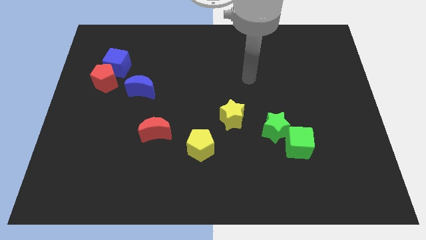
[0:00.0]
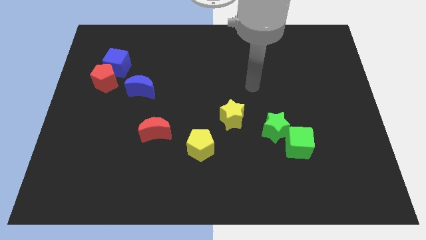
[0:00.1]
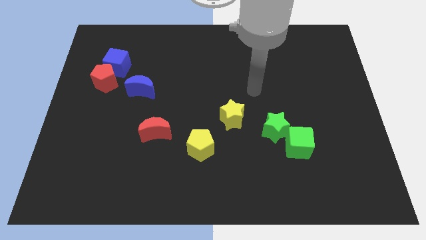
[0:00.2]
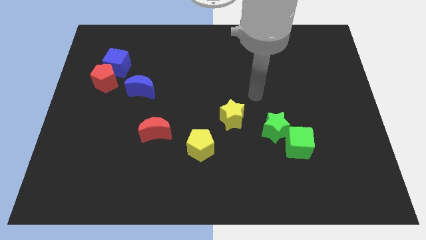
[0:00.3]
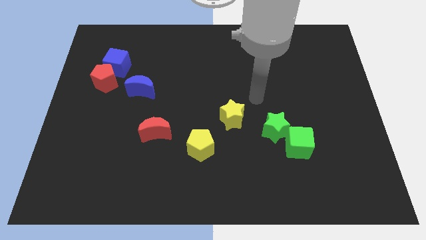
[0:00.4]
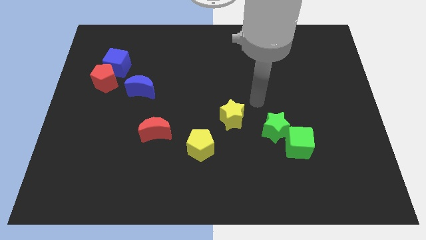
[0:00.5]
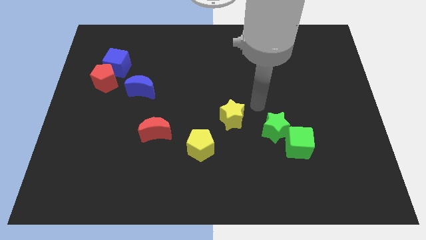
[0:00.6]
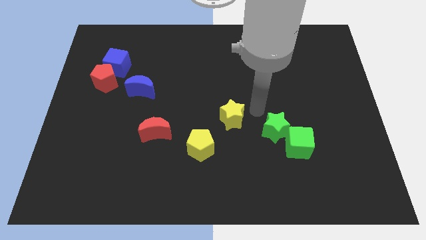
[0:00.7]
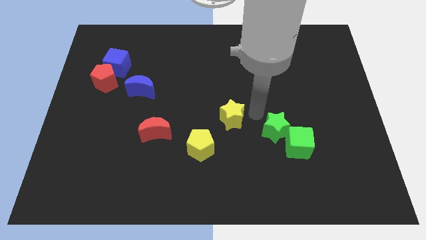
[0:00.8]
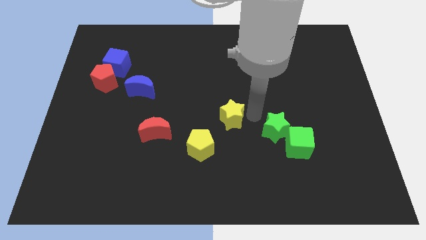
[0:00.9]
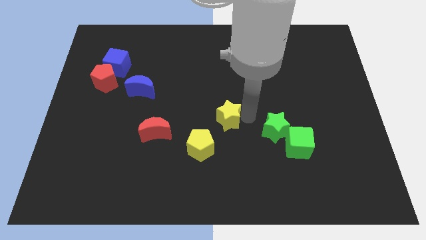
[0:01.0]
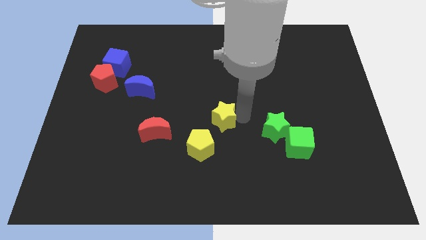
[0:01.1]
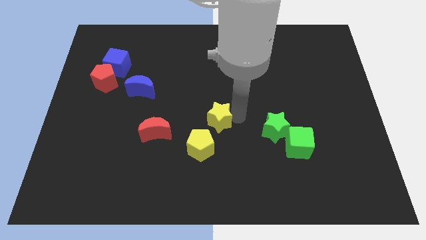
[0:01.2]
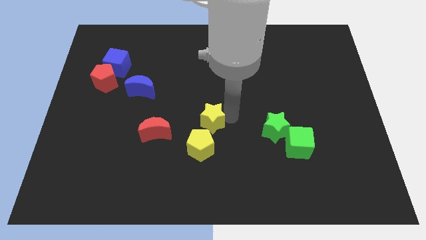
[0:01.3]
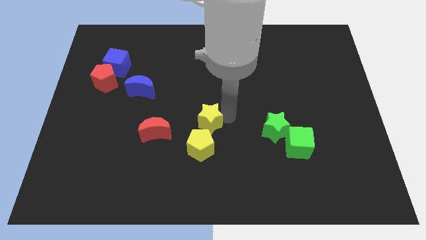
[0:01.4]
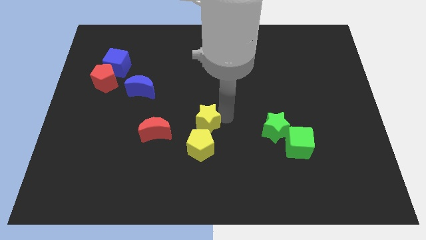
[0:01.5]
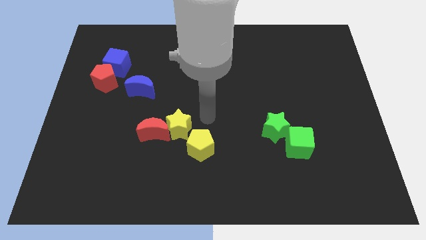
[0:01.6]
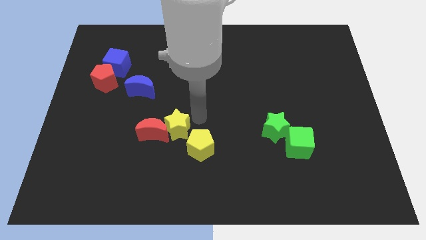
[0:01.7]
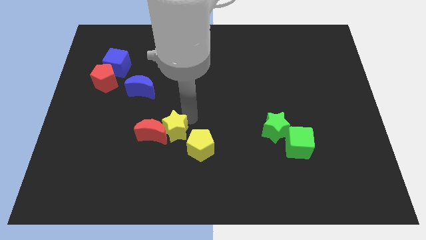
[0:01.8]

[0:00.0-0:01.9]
push the yellow star towards the red moon

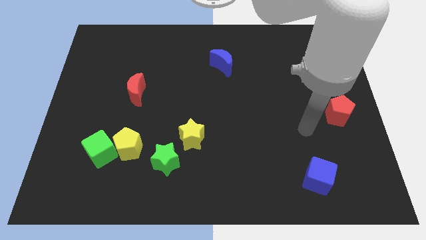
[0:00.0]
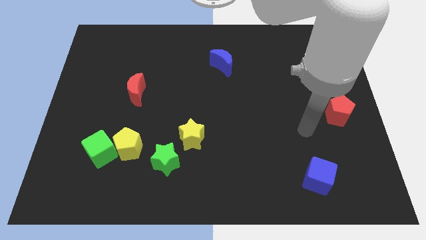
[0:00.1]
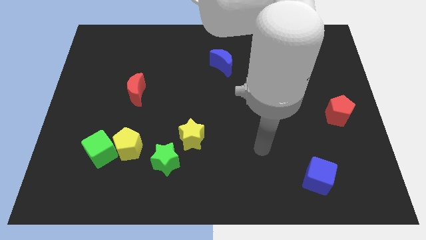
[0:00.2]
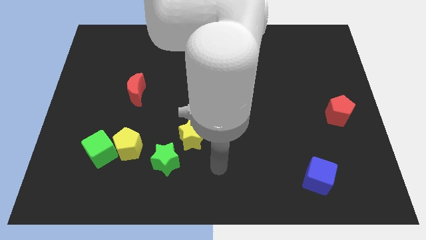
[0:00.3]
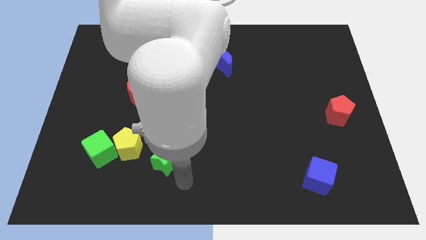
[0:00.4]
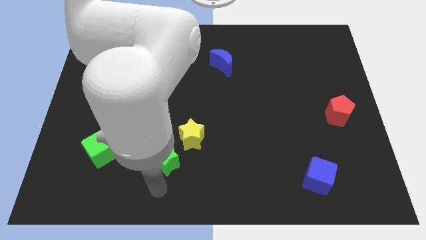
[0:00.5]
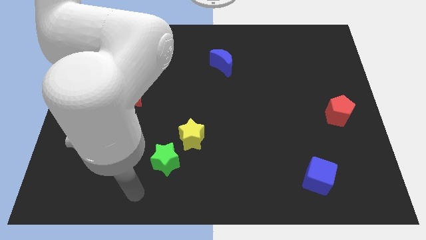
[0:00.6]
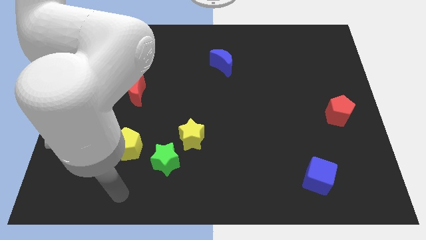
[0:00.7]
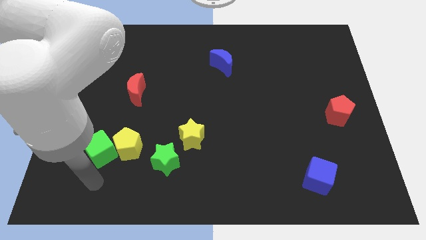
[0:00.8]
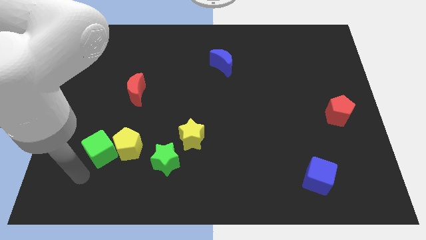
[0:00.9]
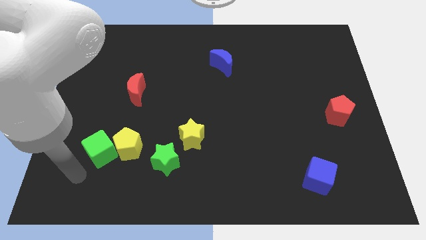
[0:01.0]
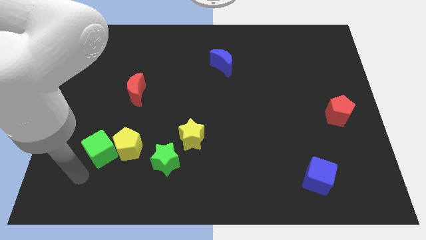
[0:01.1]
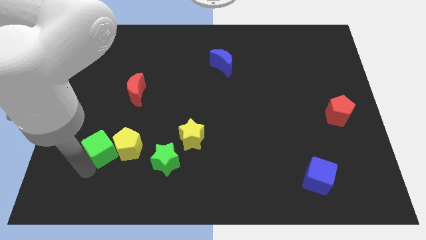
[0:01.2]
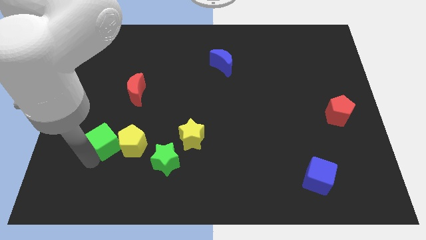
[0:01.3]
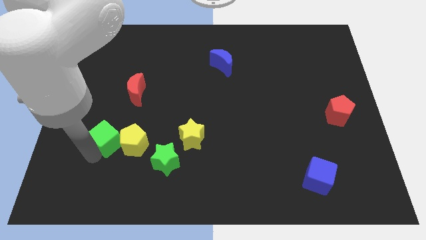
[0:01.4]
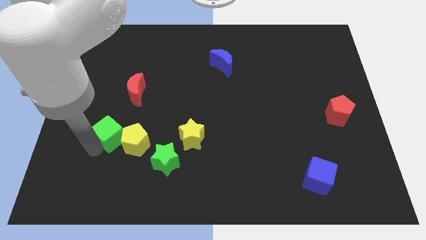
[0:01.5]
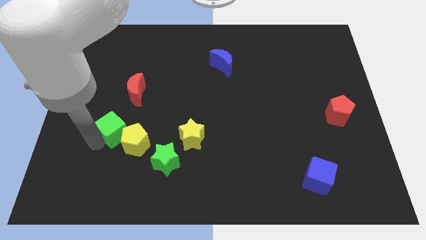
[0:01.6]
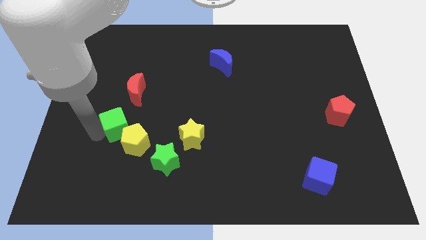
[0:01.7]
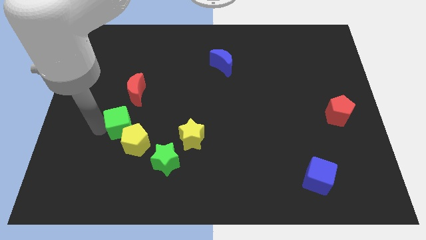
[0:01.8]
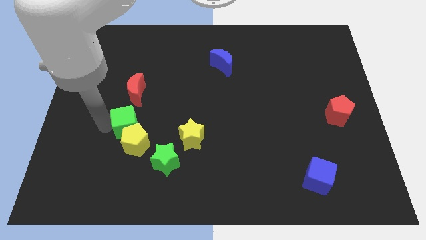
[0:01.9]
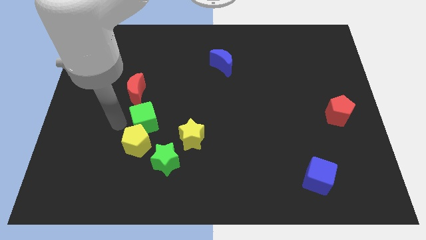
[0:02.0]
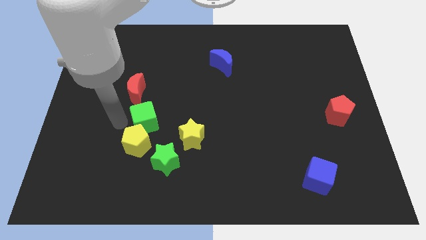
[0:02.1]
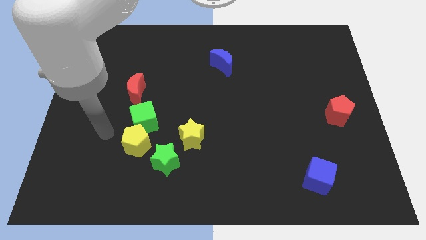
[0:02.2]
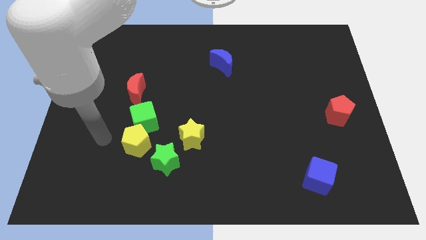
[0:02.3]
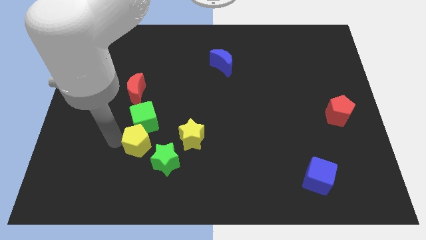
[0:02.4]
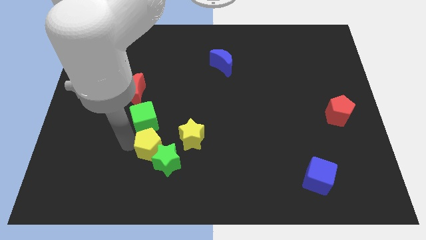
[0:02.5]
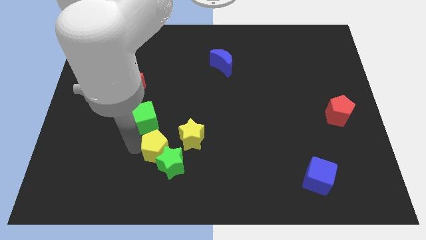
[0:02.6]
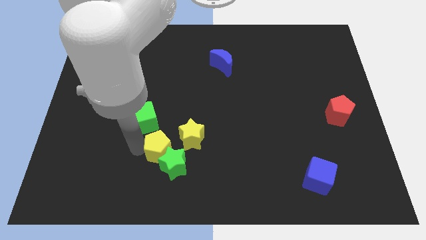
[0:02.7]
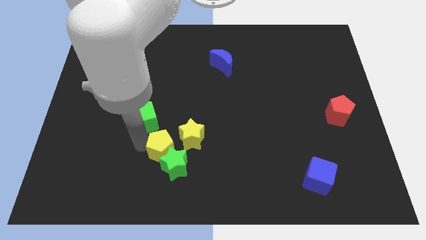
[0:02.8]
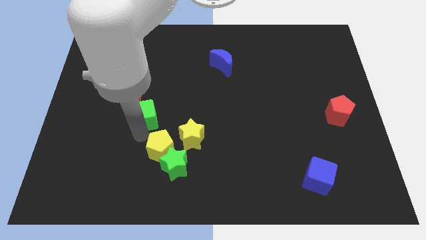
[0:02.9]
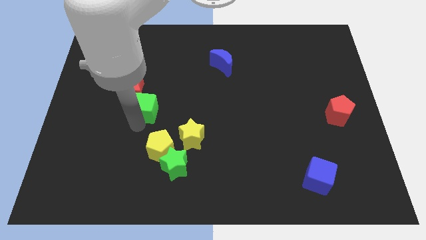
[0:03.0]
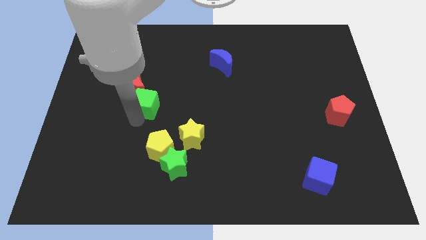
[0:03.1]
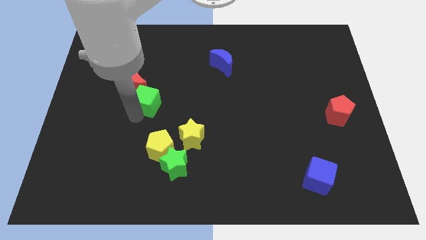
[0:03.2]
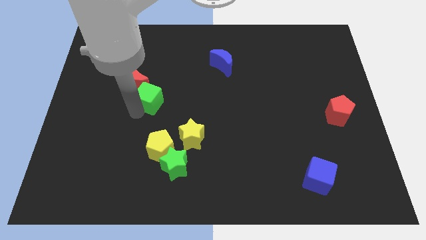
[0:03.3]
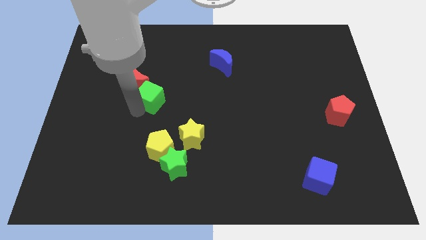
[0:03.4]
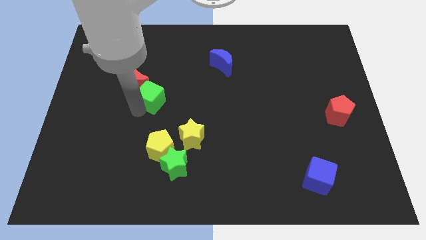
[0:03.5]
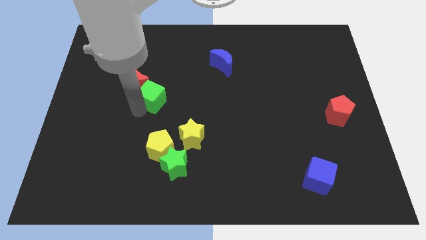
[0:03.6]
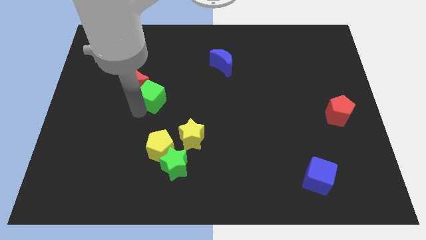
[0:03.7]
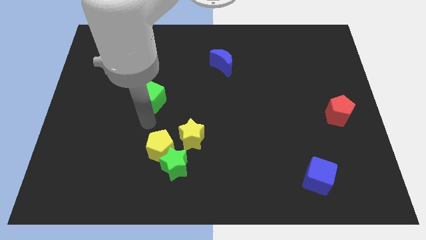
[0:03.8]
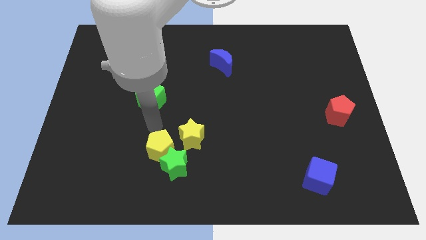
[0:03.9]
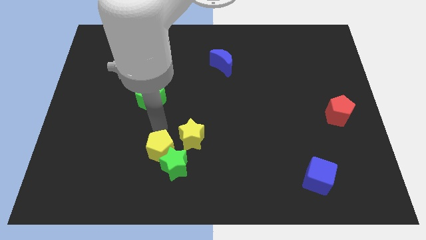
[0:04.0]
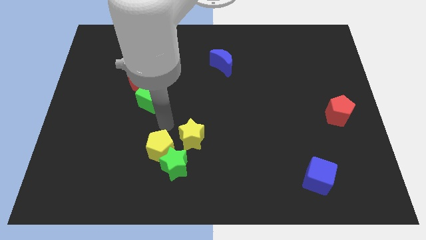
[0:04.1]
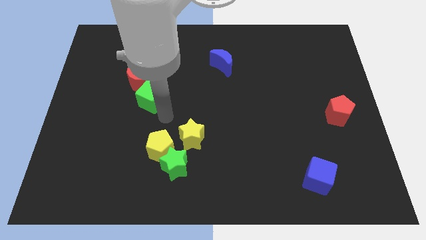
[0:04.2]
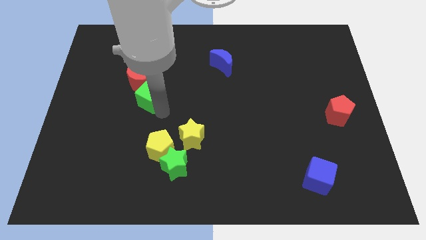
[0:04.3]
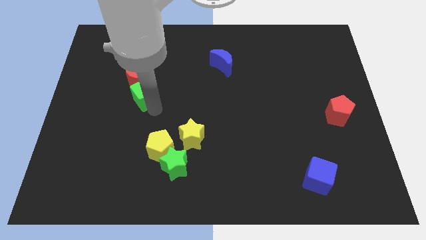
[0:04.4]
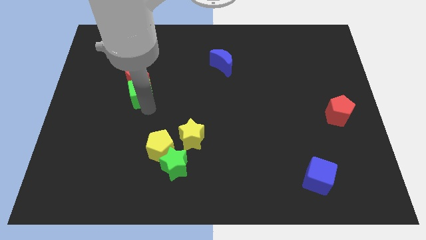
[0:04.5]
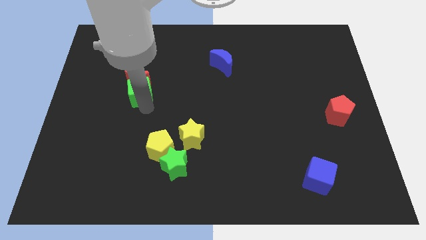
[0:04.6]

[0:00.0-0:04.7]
move the green cube next to the red moon

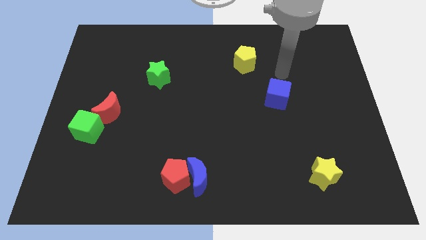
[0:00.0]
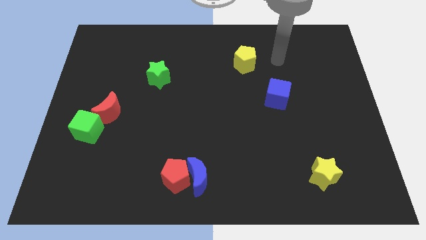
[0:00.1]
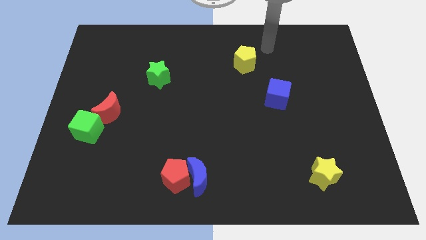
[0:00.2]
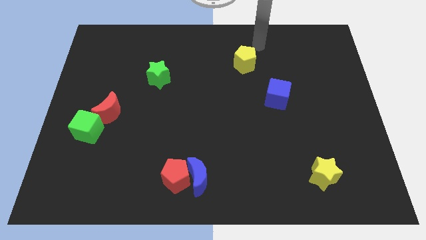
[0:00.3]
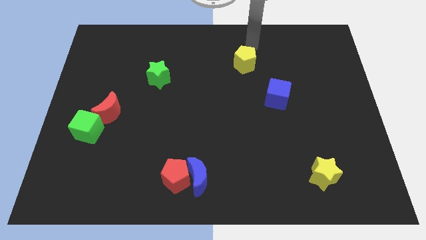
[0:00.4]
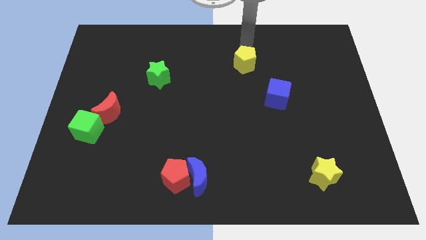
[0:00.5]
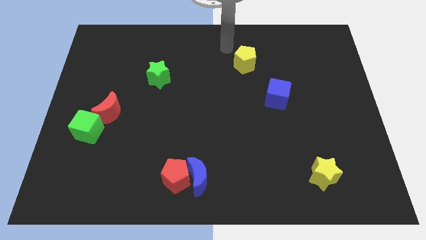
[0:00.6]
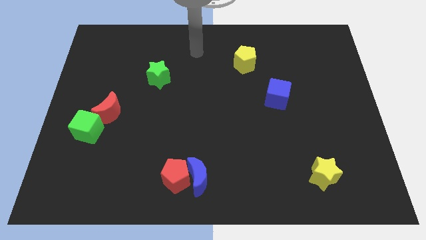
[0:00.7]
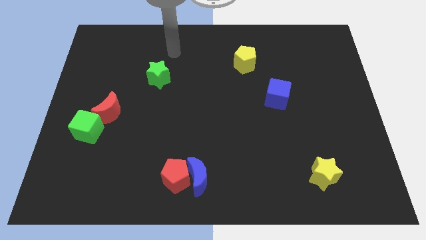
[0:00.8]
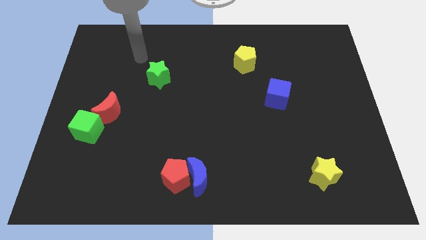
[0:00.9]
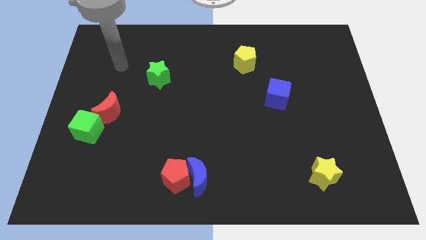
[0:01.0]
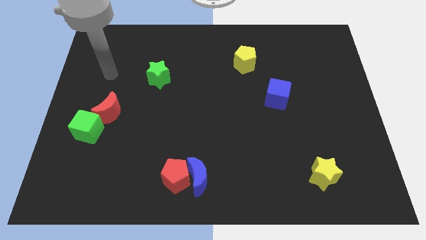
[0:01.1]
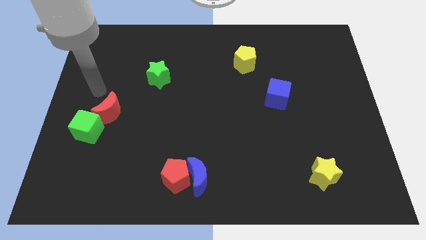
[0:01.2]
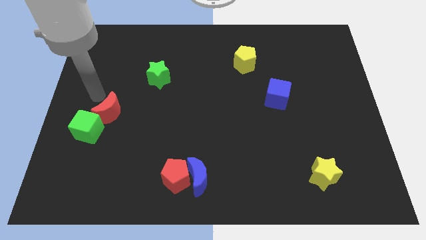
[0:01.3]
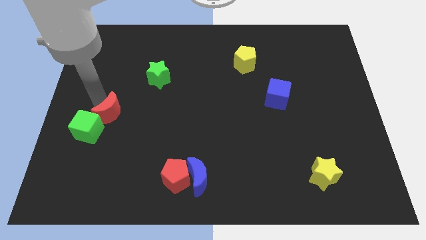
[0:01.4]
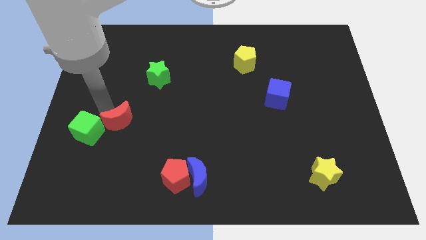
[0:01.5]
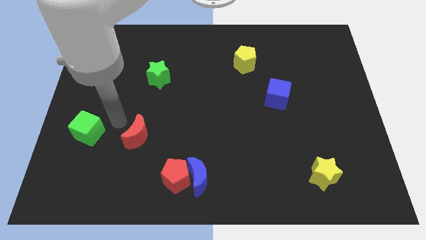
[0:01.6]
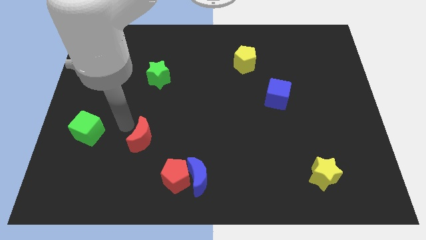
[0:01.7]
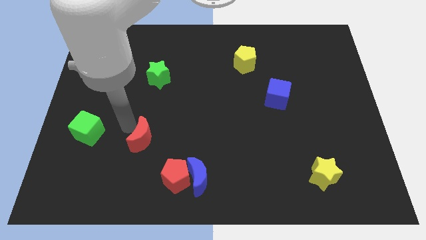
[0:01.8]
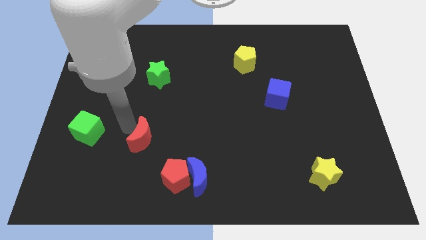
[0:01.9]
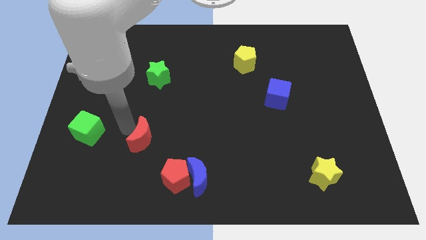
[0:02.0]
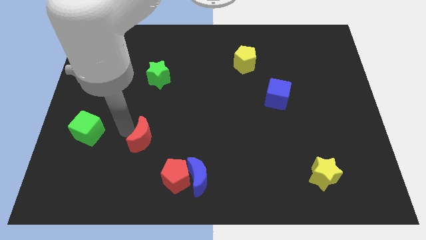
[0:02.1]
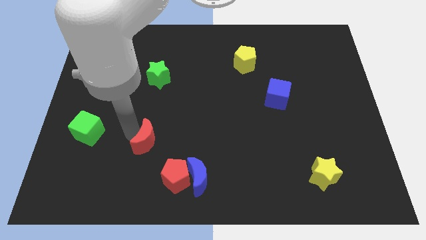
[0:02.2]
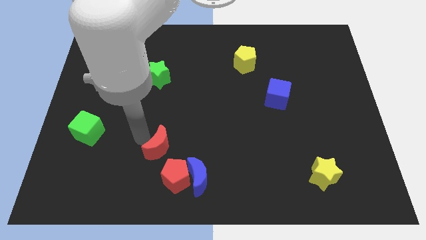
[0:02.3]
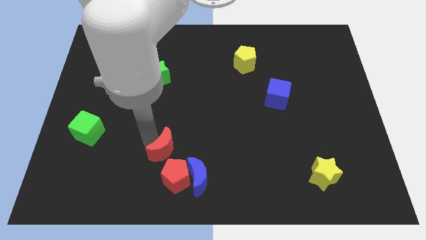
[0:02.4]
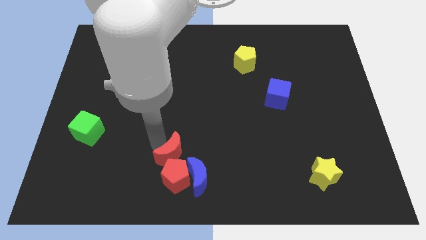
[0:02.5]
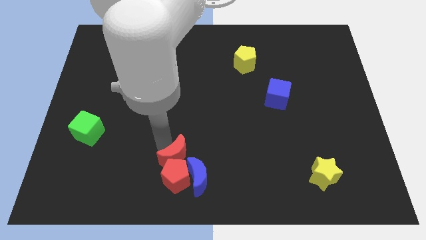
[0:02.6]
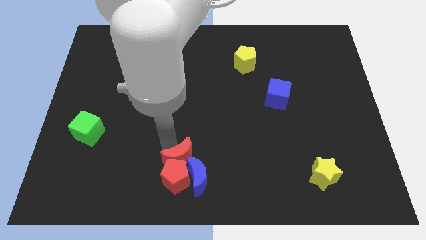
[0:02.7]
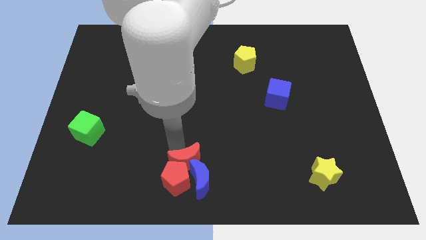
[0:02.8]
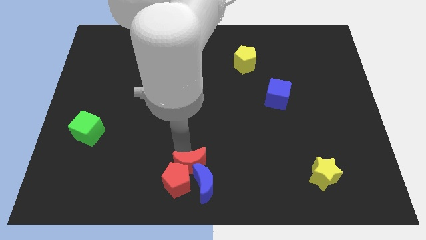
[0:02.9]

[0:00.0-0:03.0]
put the red moon close to the blue moon
